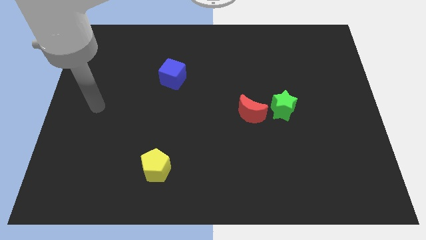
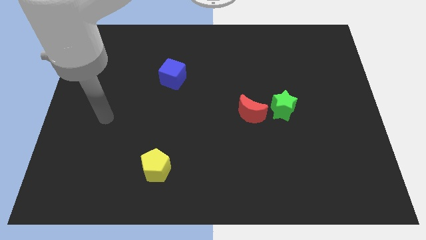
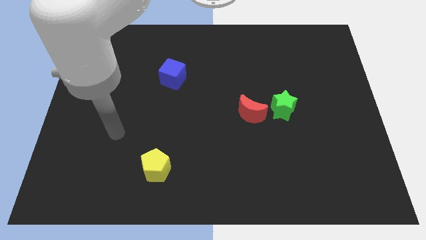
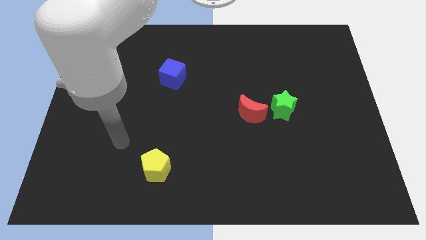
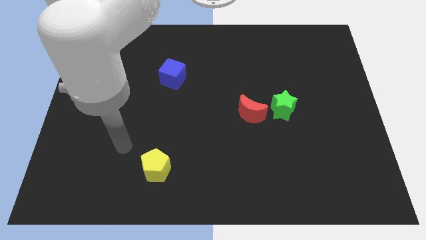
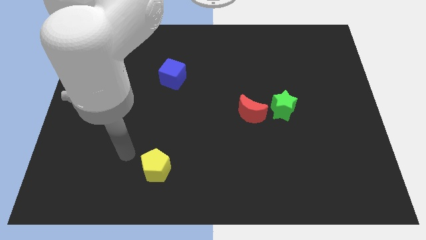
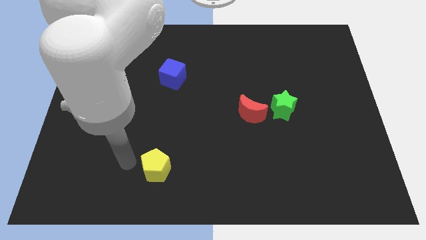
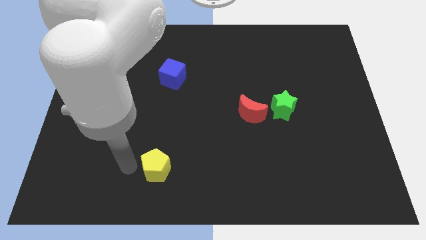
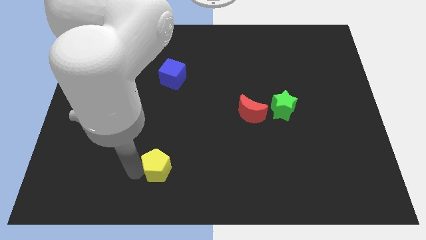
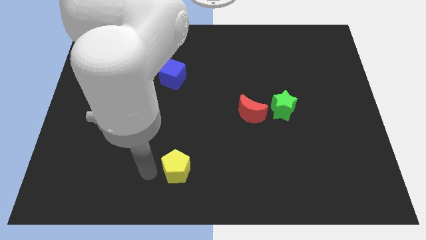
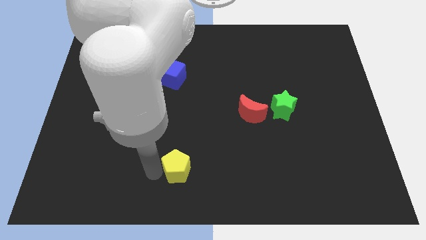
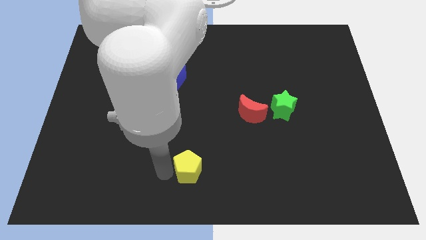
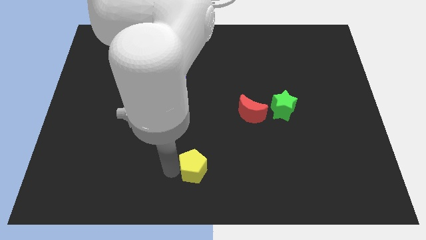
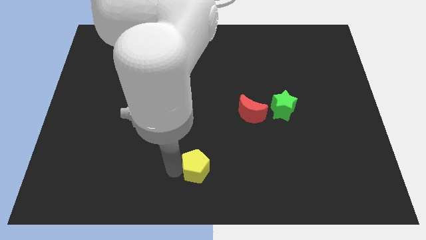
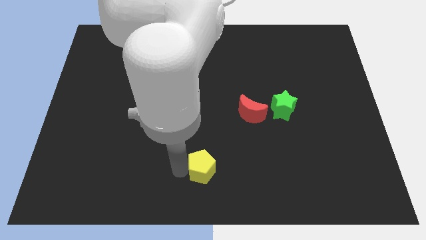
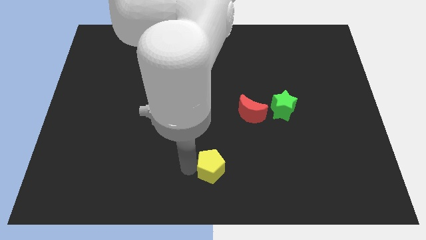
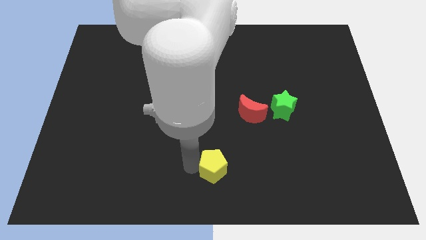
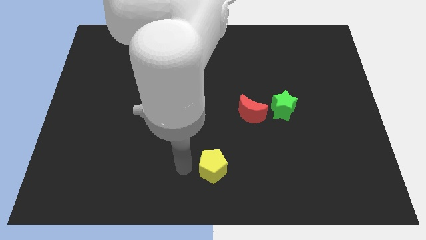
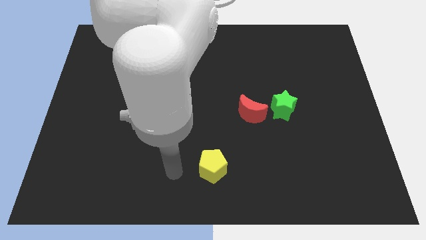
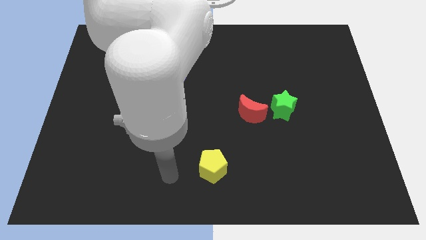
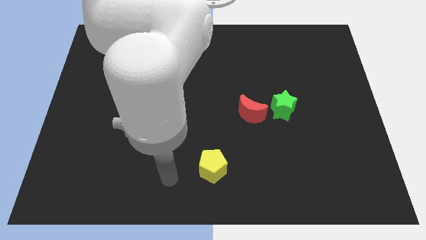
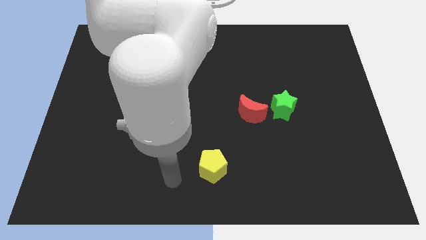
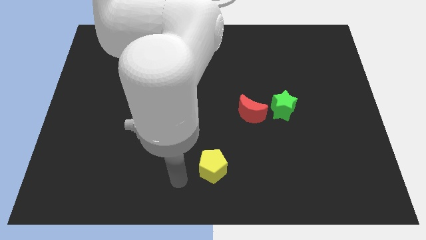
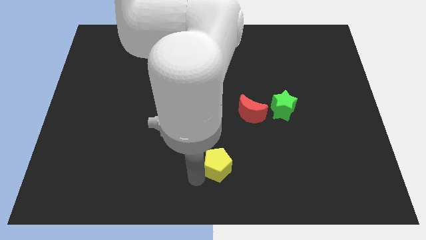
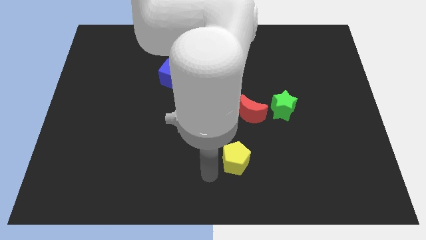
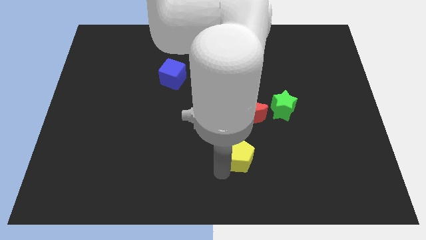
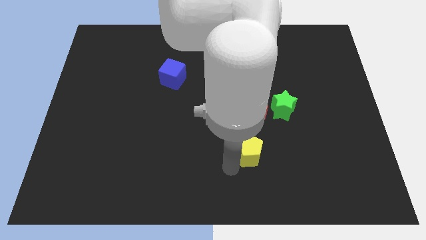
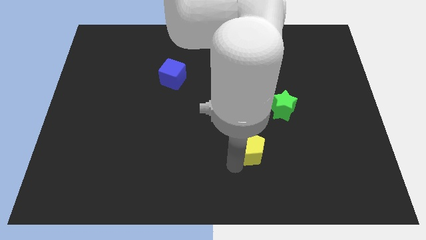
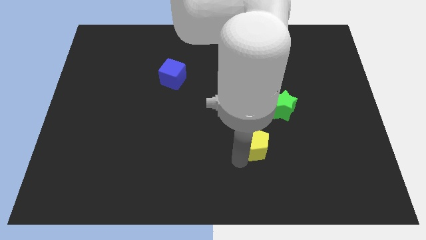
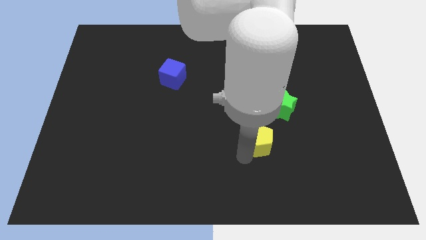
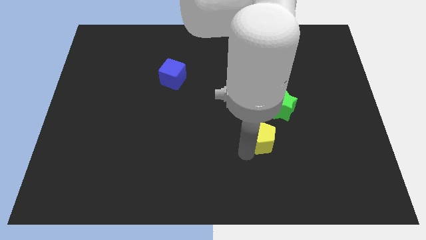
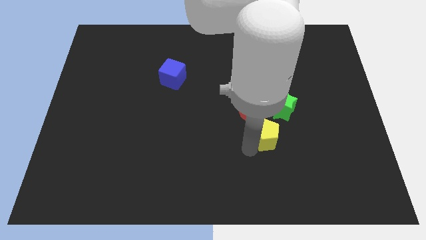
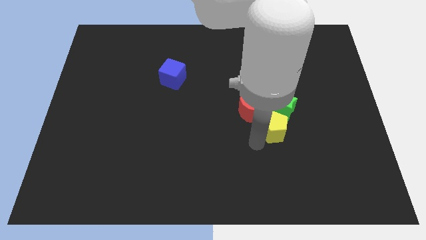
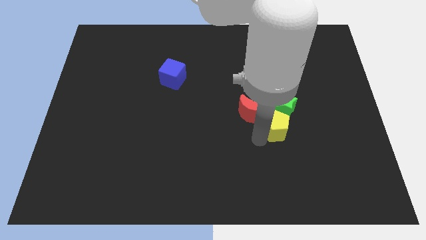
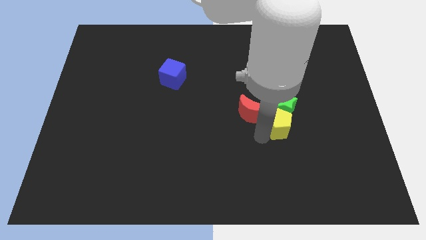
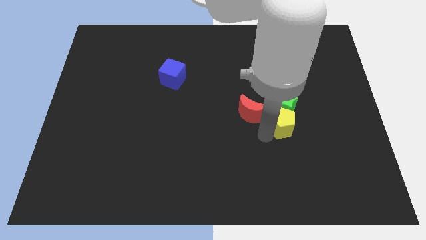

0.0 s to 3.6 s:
move the yellow pentagon close to the green star

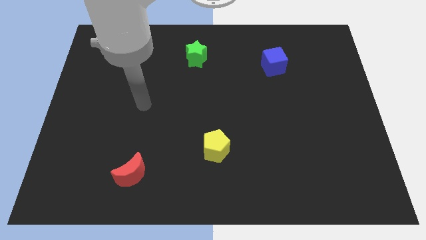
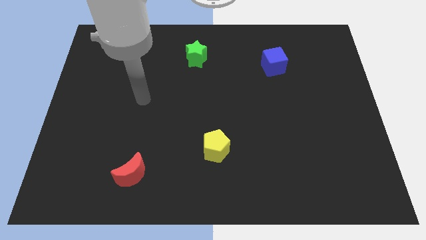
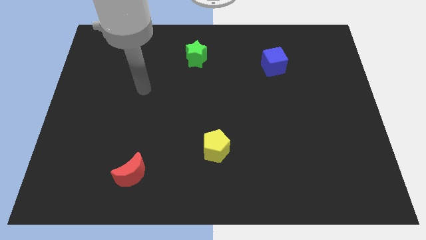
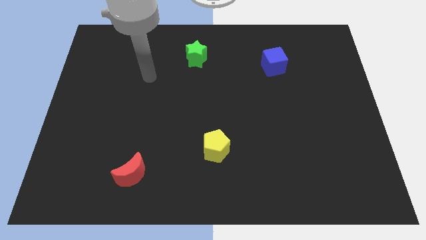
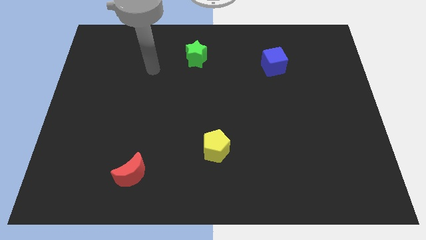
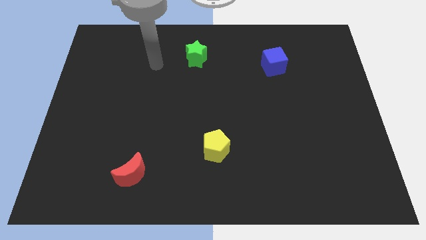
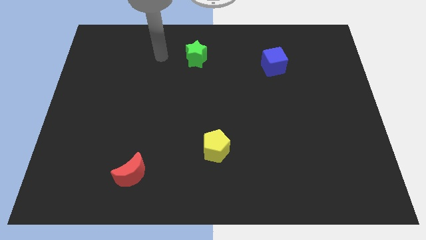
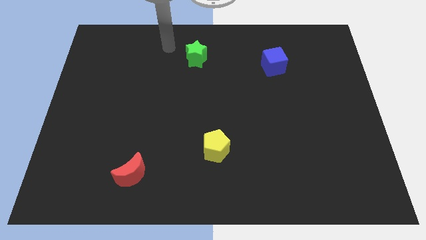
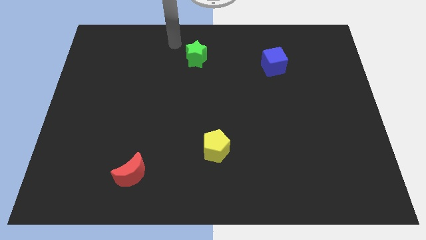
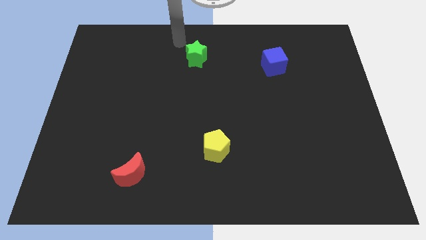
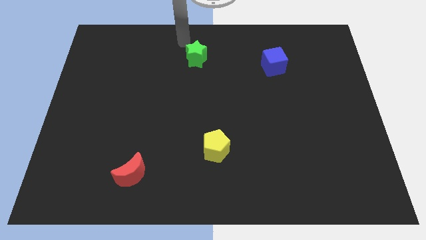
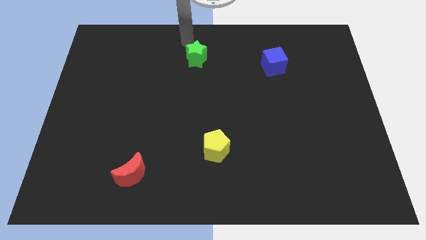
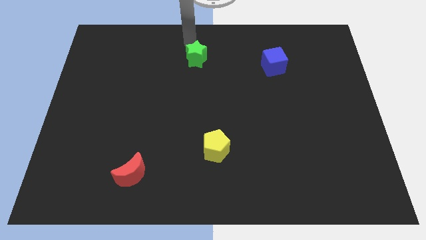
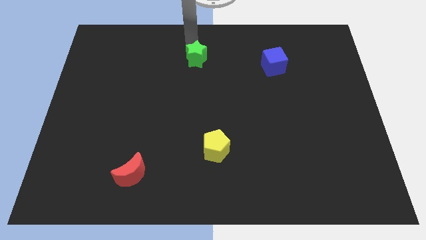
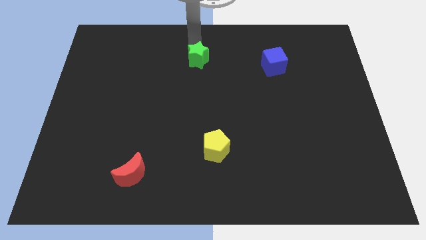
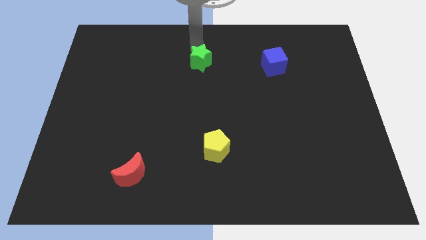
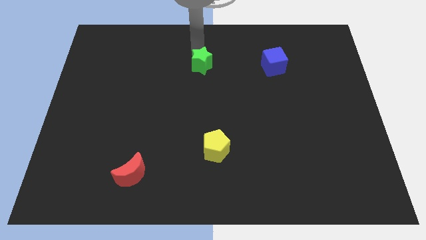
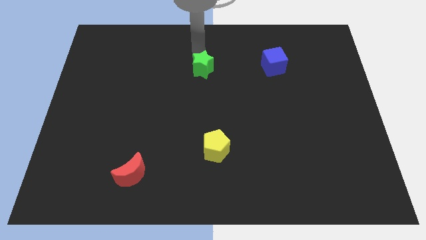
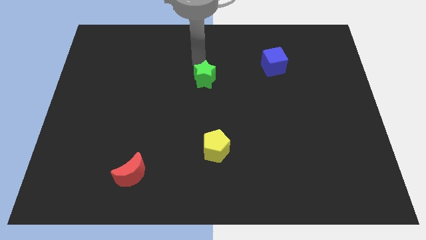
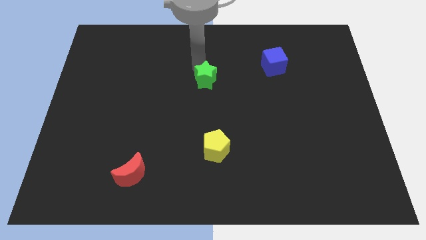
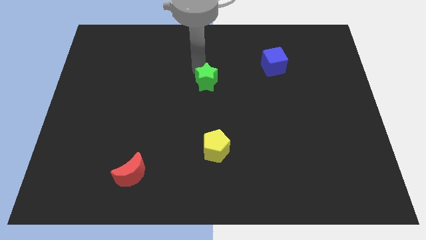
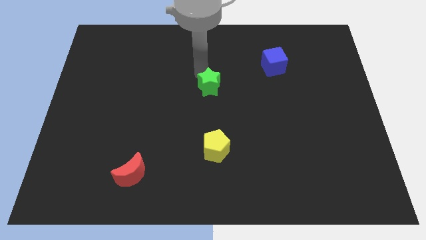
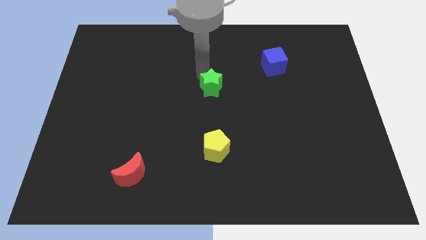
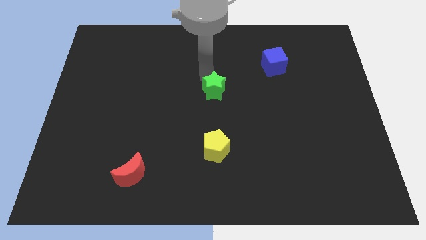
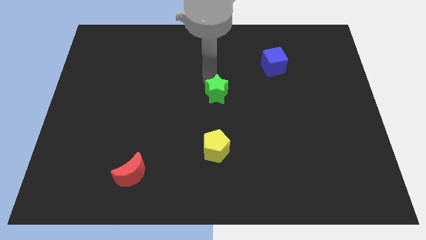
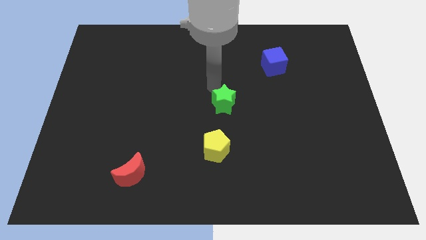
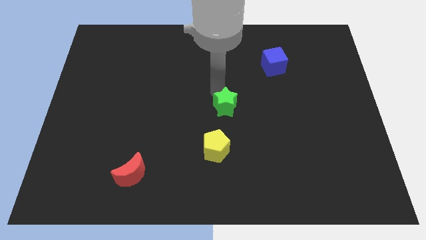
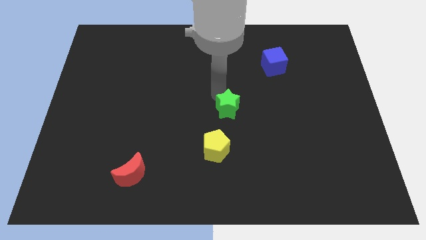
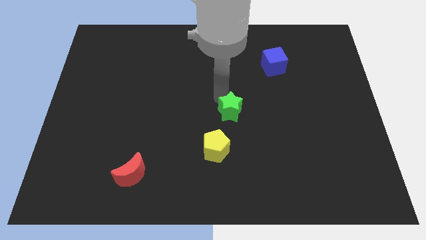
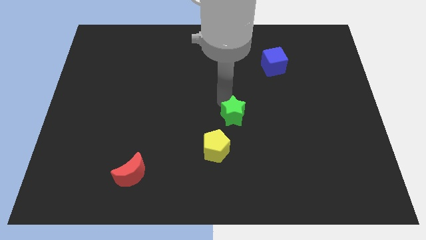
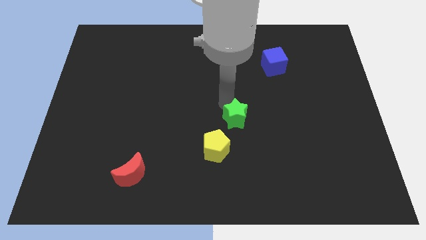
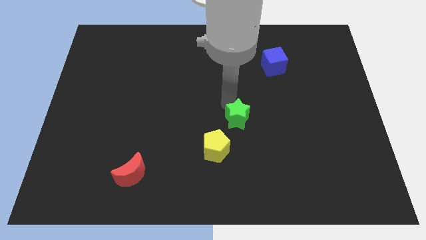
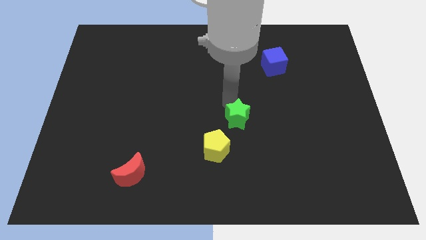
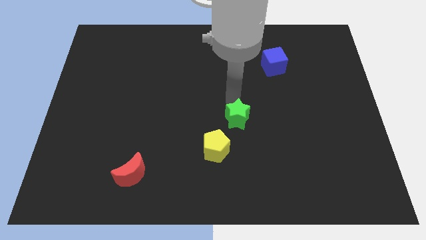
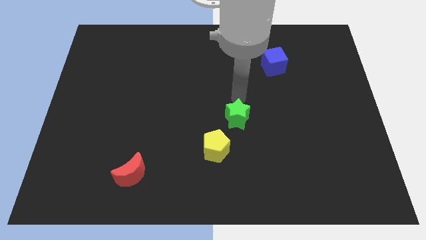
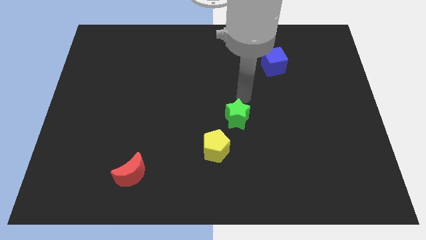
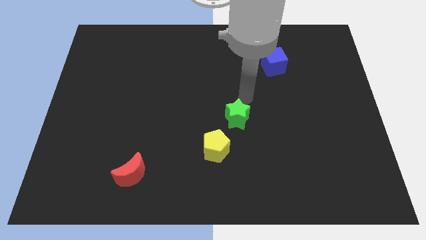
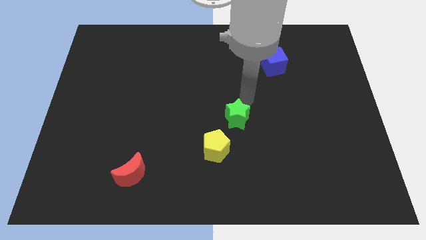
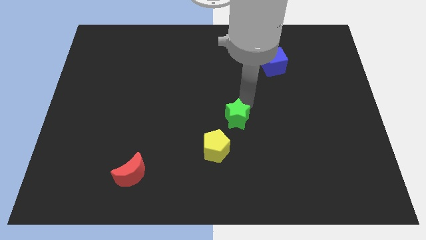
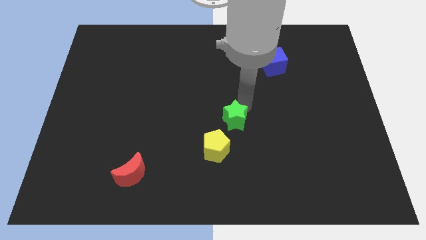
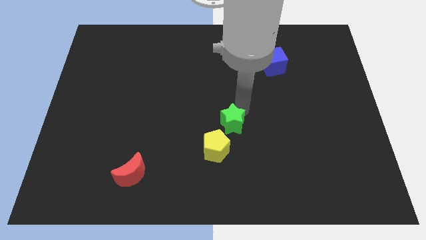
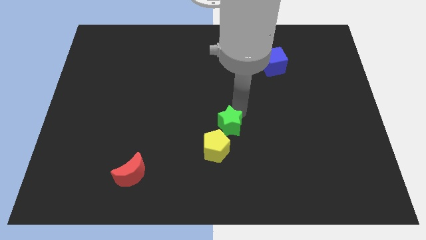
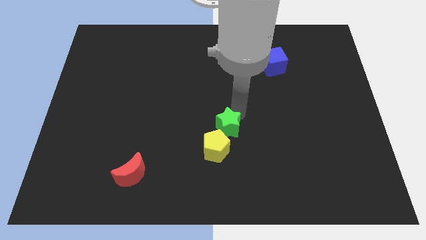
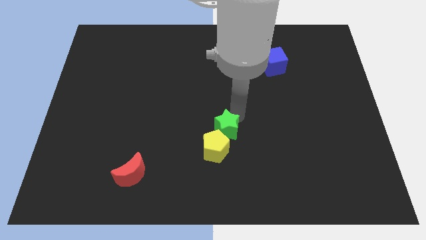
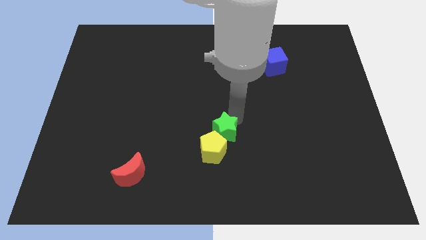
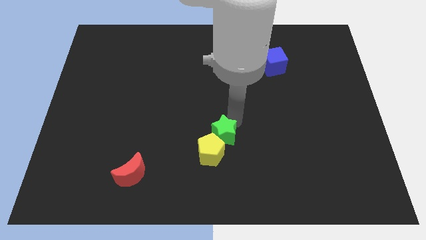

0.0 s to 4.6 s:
move the star next to the pentagon
